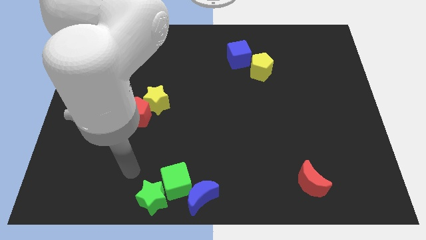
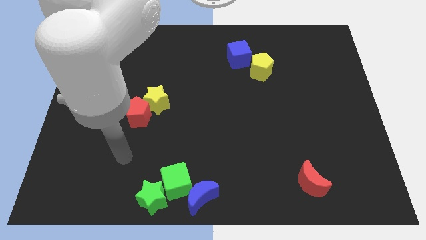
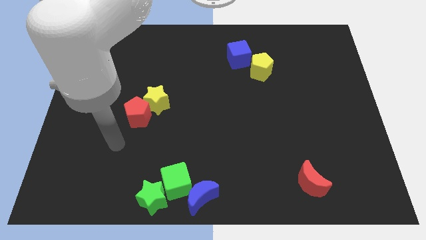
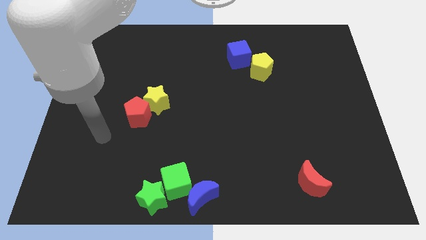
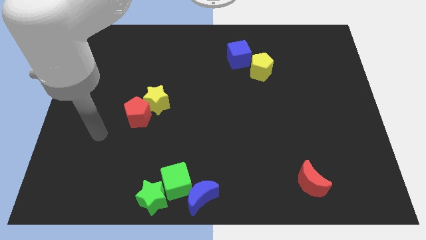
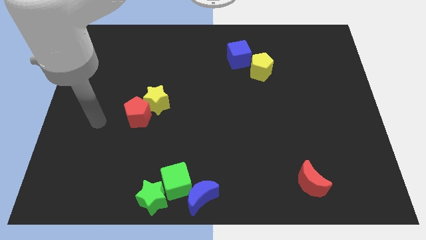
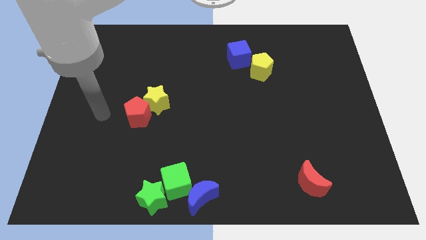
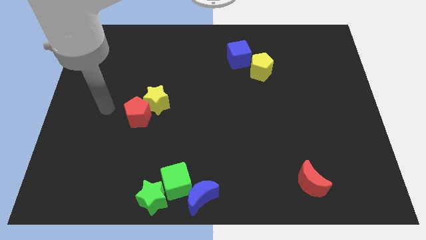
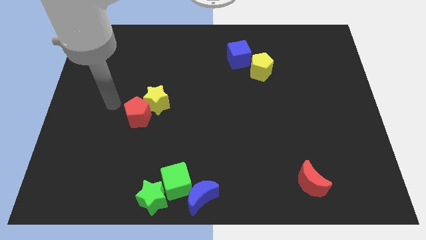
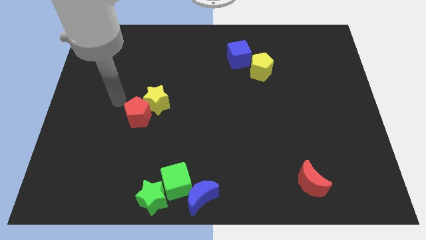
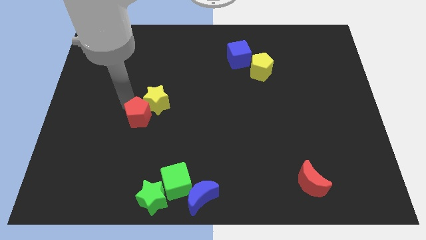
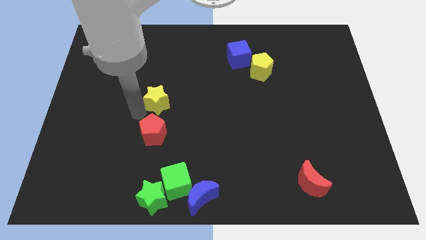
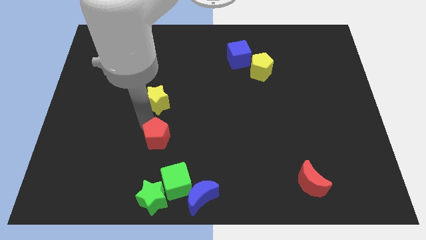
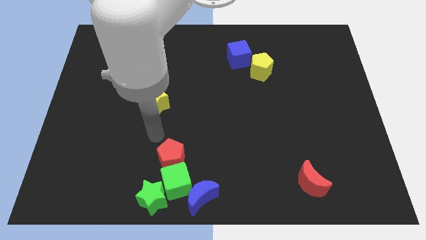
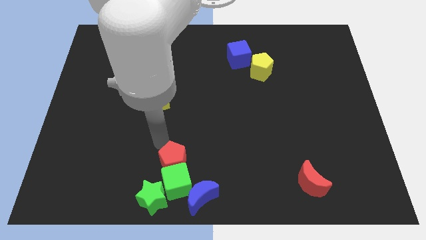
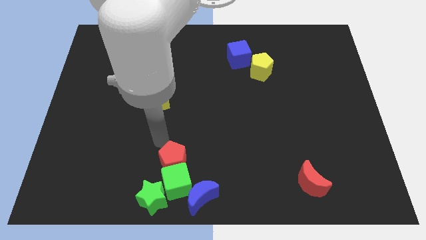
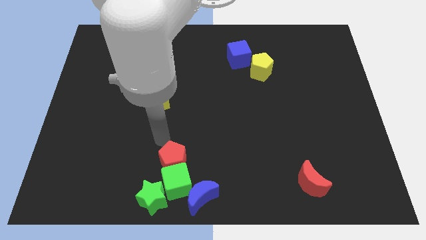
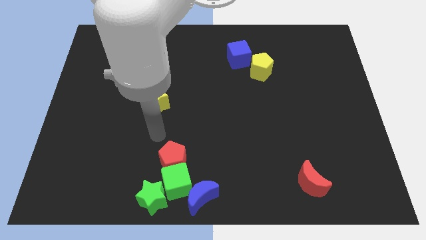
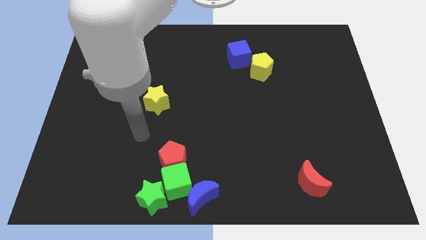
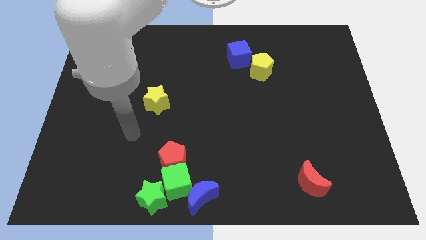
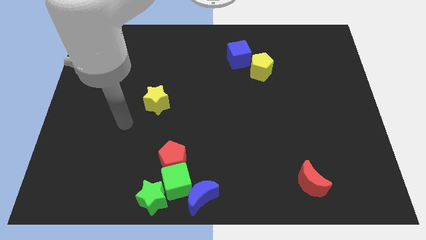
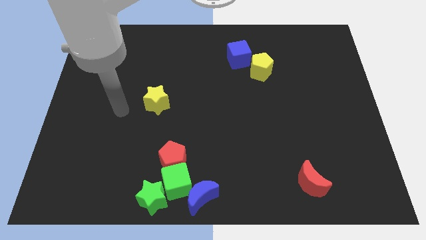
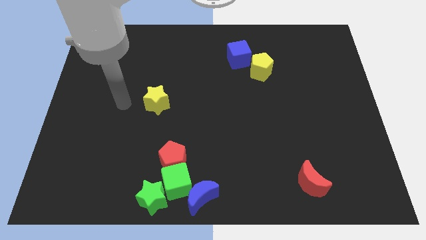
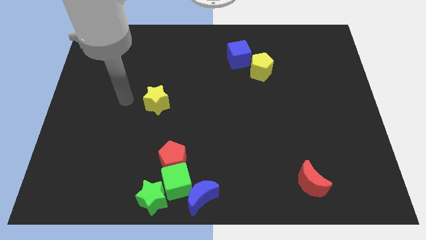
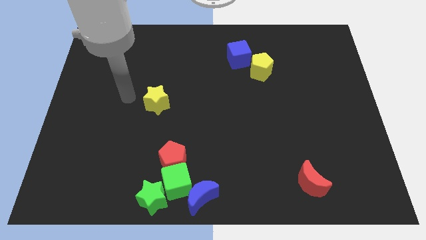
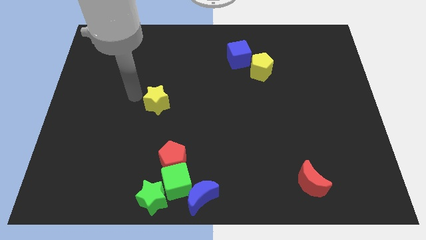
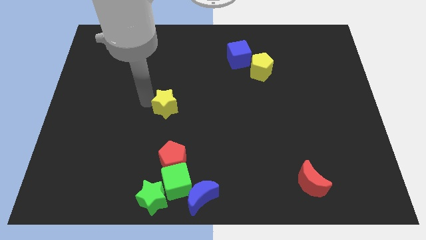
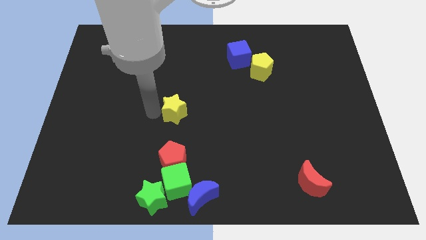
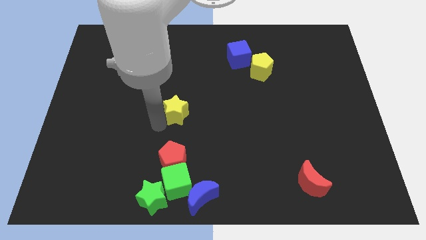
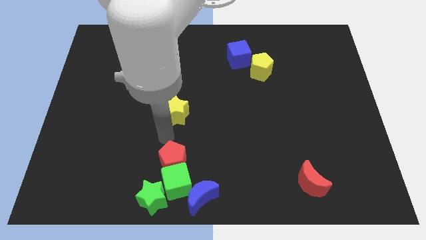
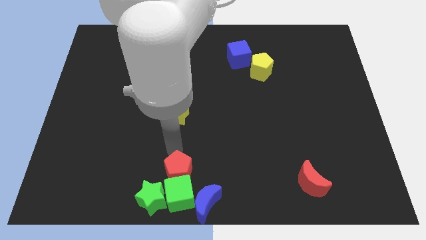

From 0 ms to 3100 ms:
move the yellow star down to the red pentagon

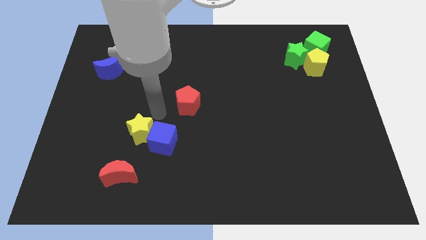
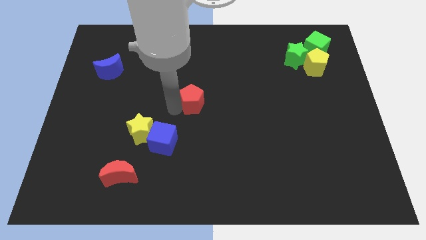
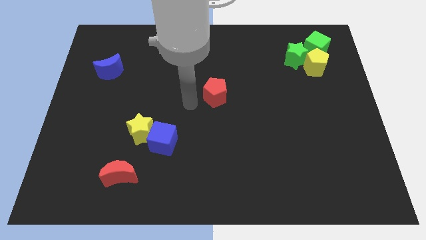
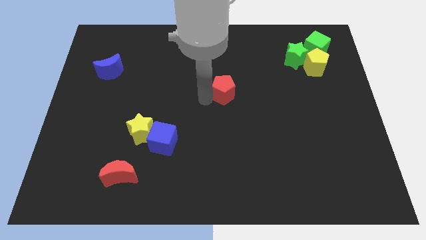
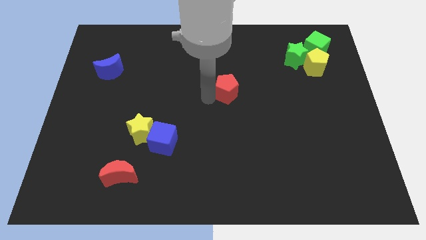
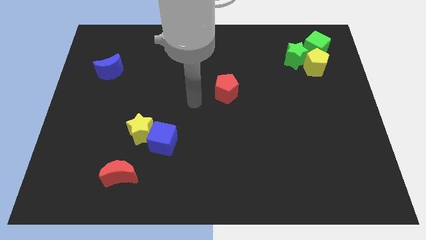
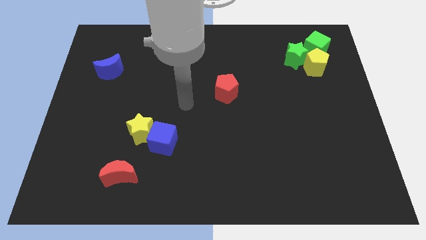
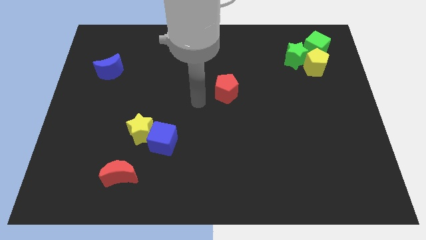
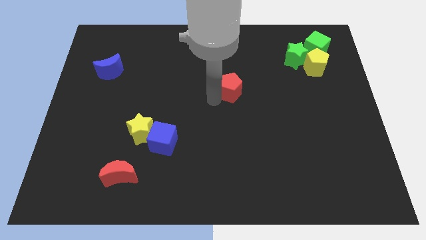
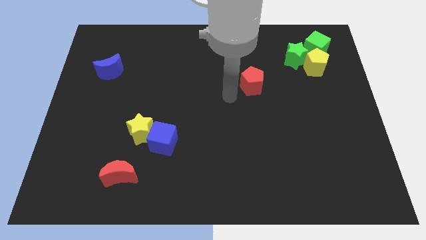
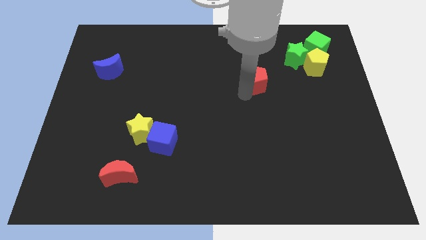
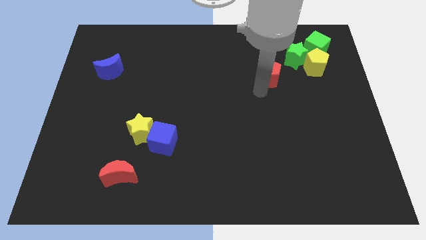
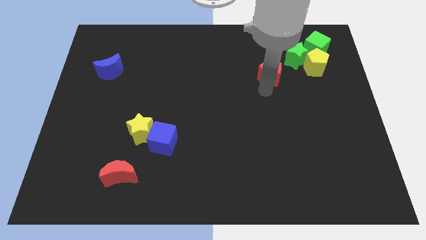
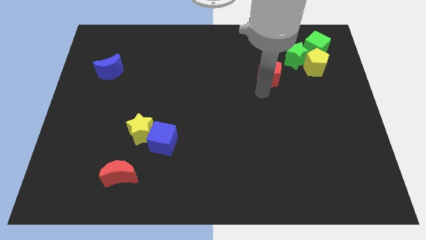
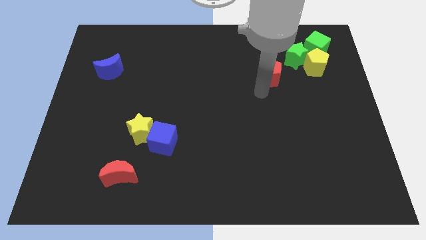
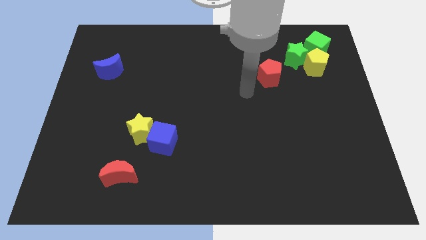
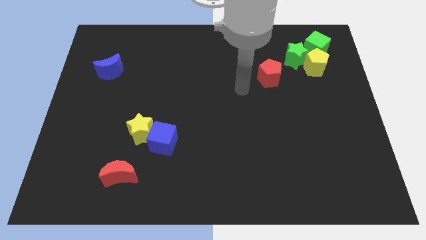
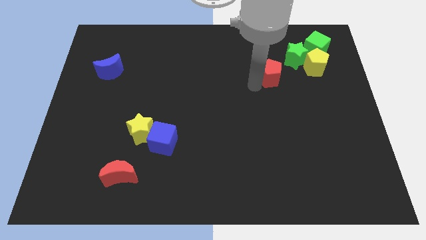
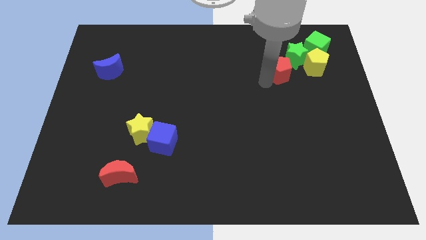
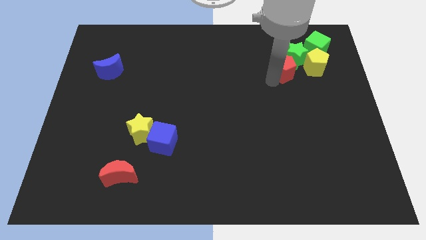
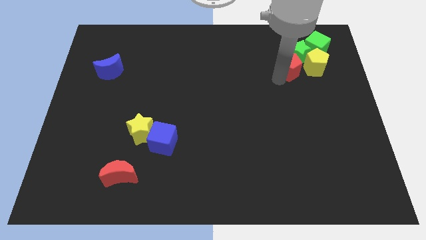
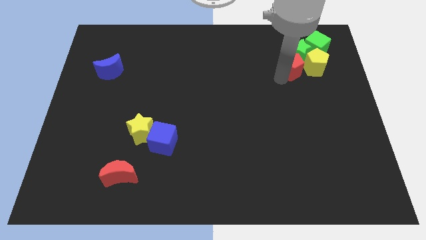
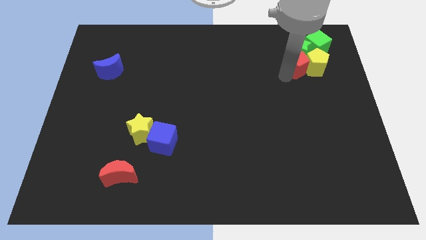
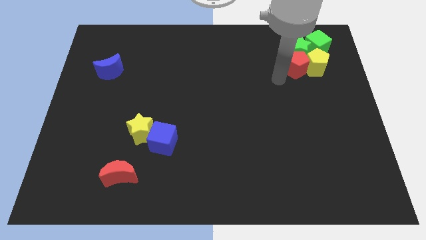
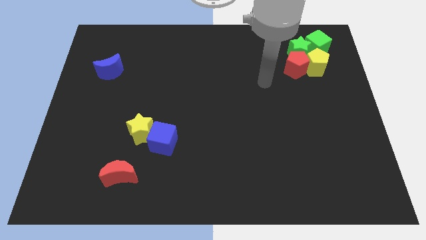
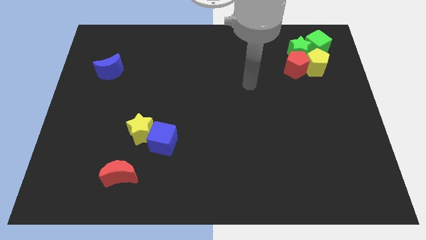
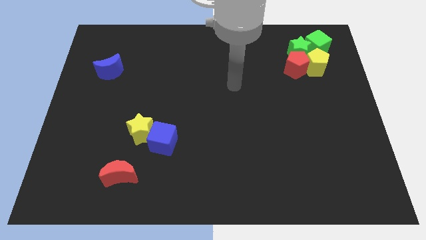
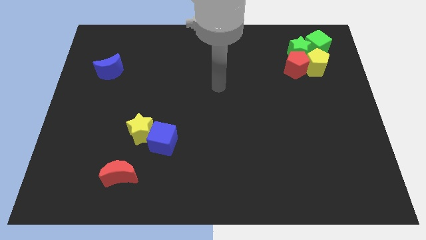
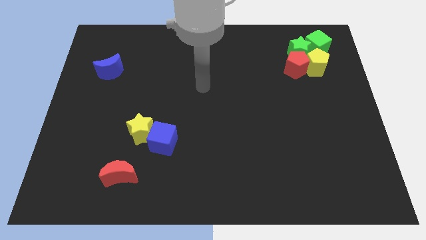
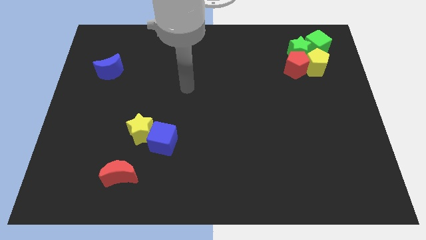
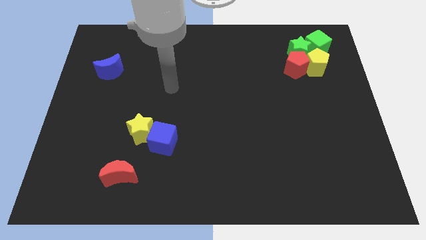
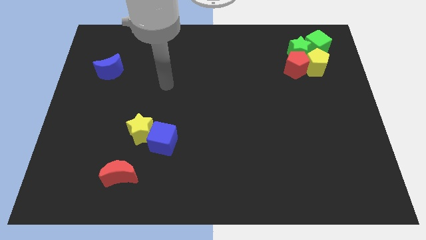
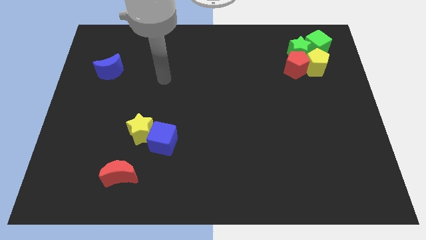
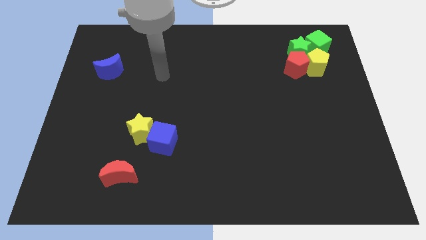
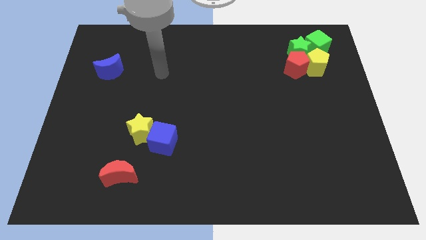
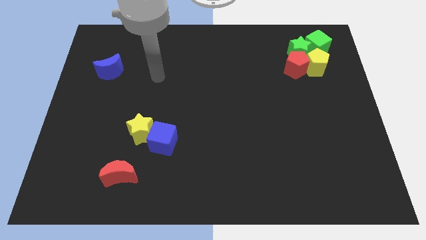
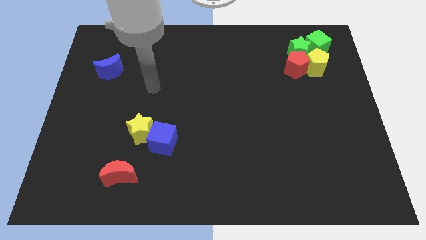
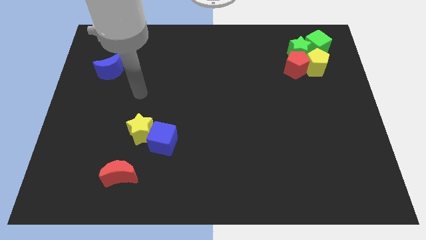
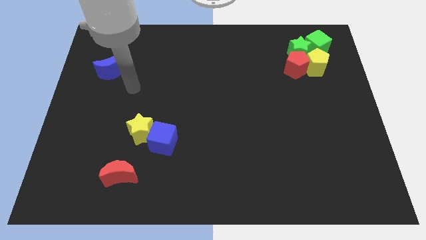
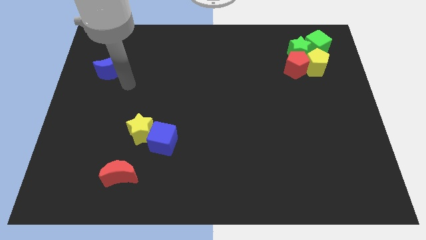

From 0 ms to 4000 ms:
push the red pentagon left to the yellow pentagon

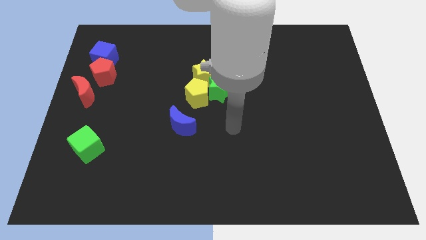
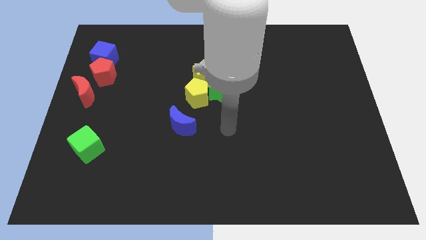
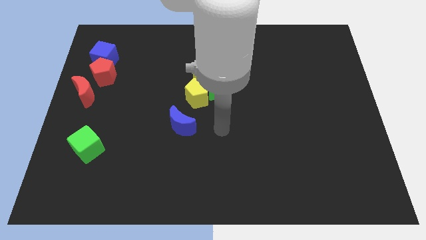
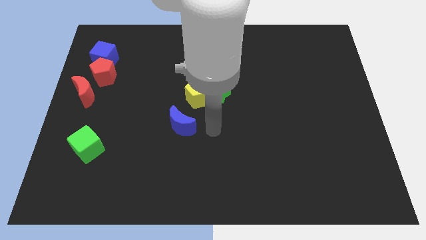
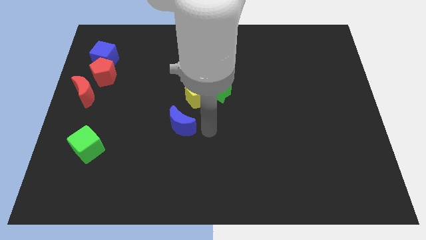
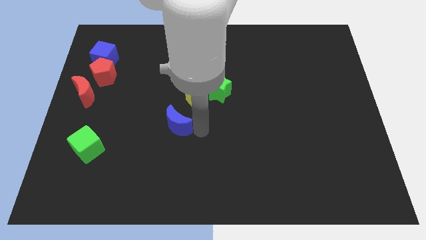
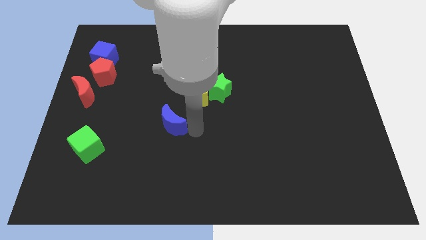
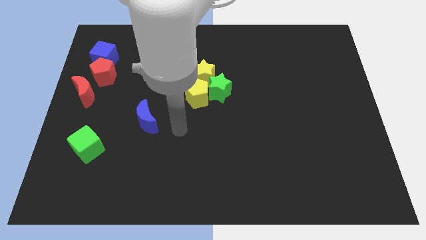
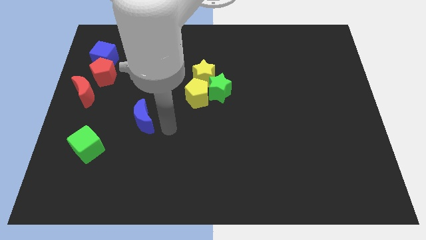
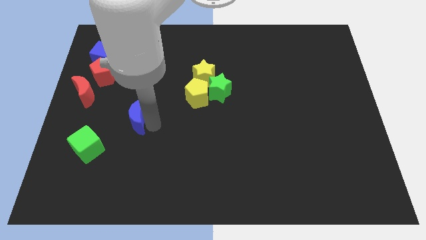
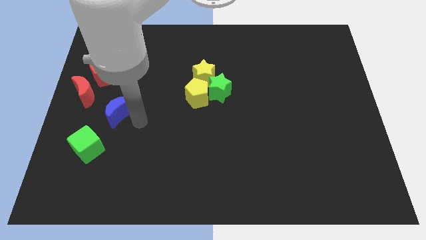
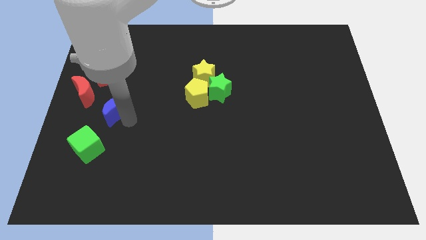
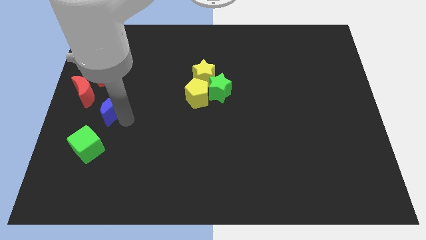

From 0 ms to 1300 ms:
slide the blue moon to the right side of the red moon

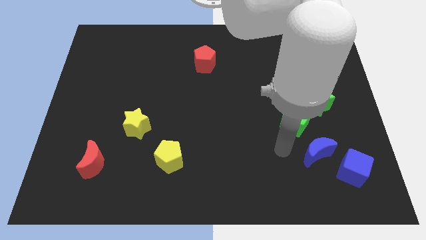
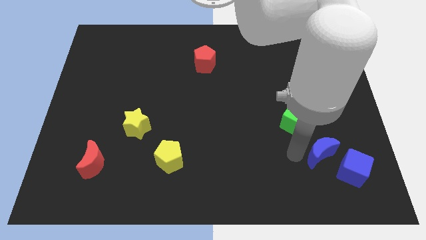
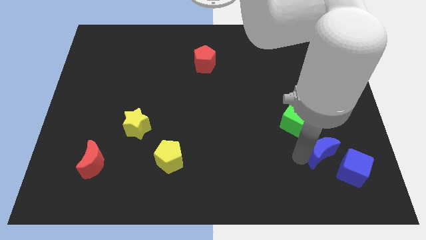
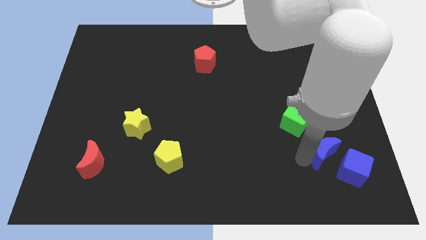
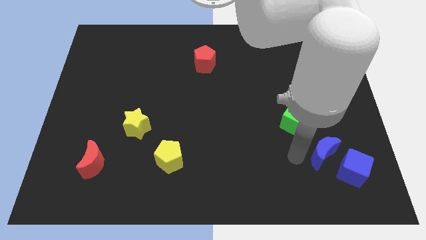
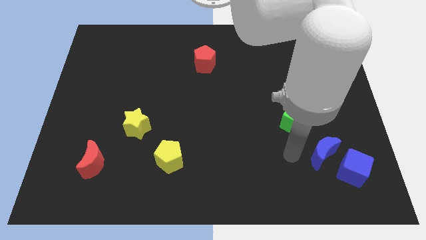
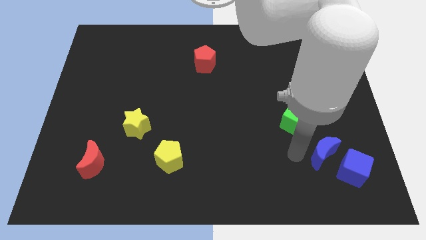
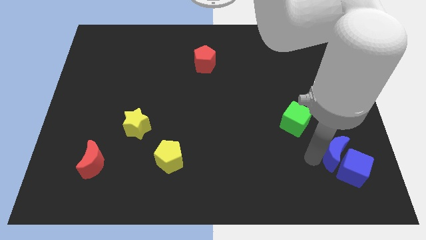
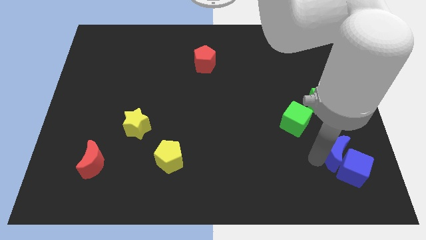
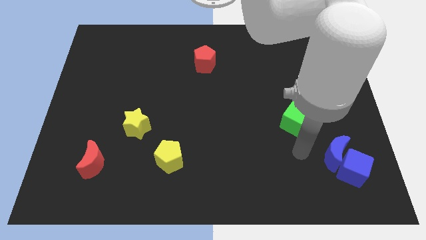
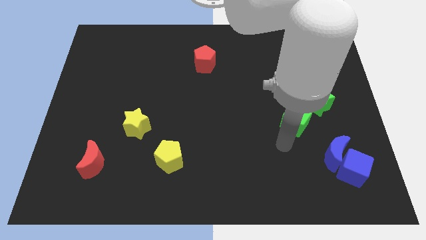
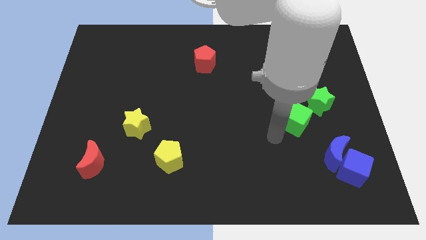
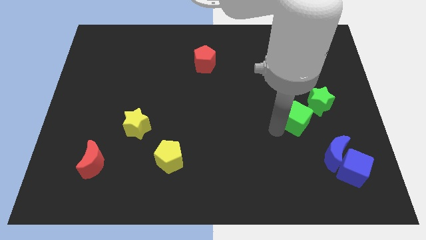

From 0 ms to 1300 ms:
make the blue moon touch the left side of the blue cube
